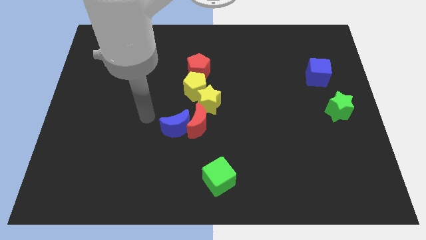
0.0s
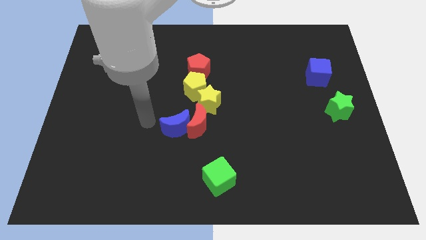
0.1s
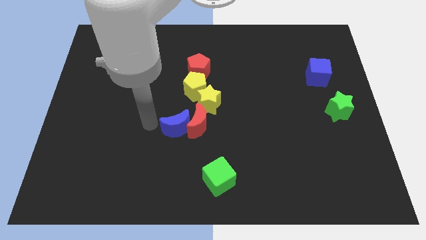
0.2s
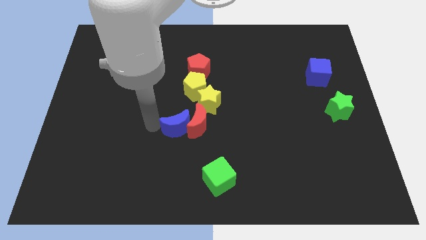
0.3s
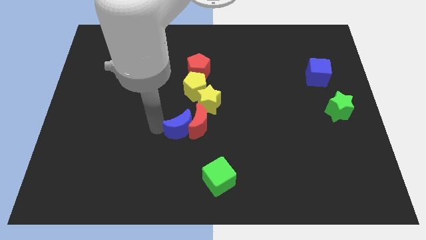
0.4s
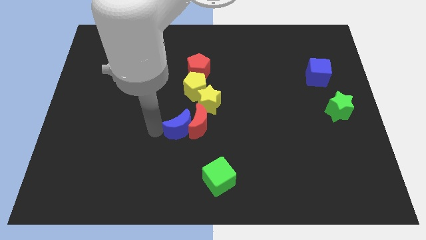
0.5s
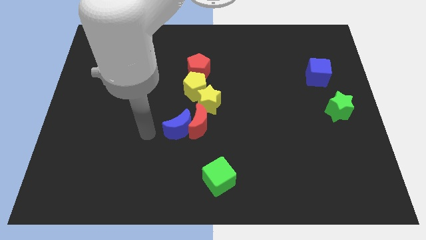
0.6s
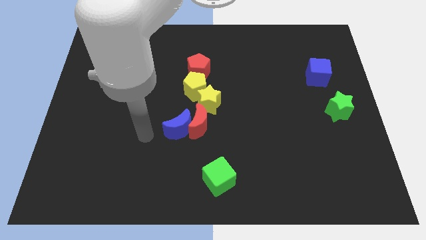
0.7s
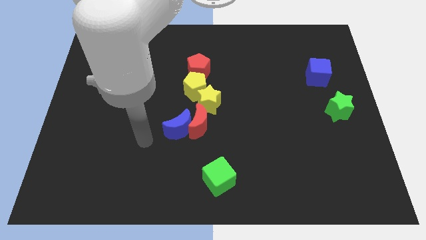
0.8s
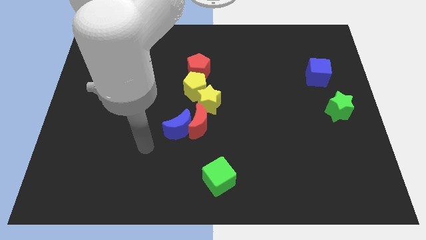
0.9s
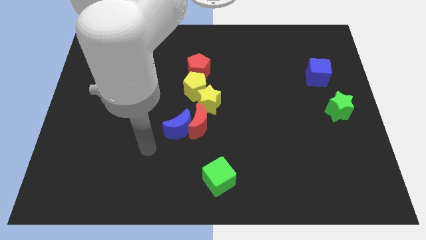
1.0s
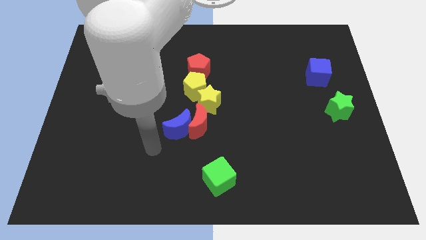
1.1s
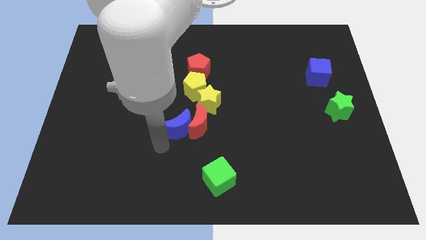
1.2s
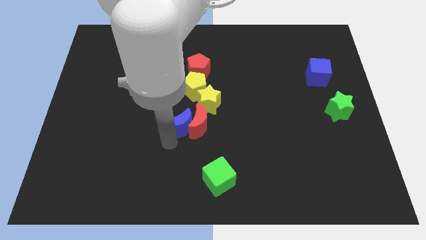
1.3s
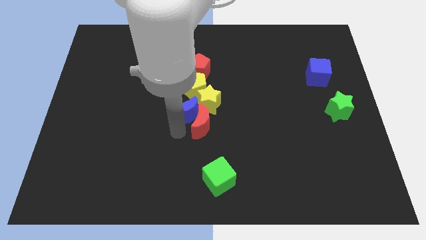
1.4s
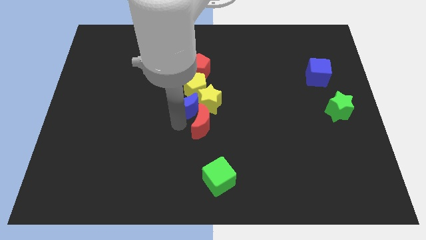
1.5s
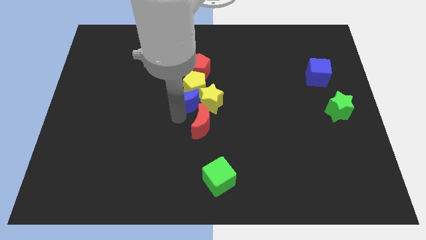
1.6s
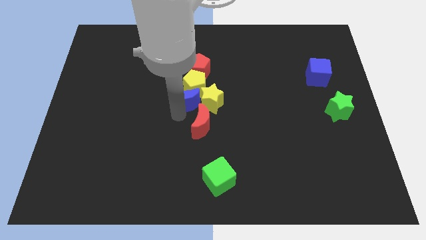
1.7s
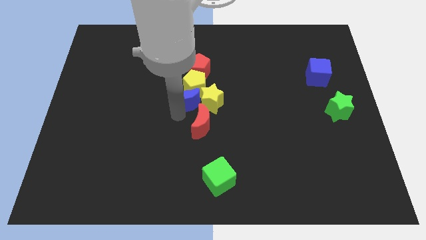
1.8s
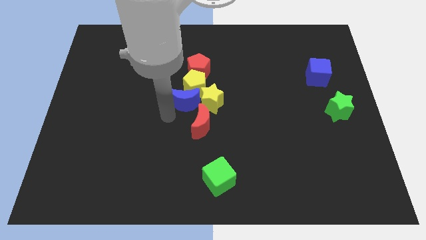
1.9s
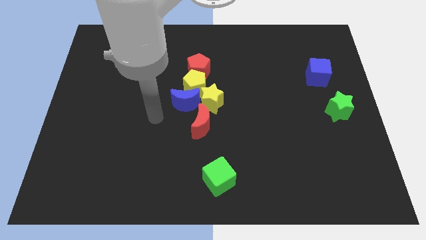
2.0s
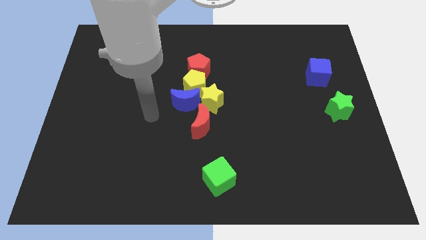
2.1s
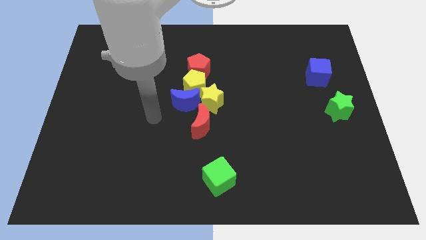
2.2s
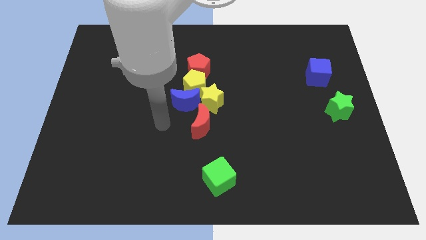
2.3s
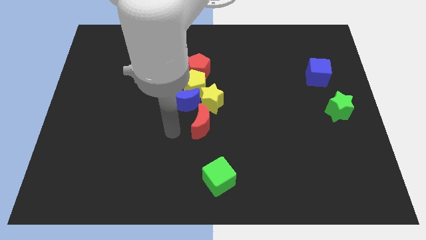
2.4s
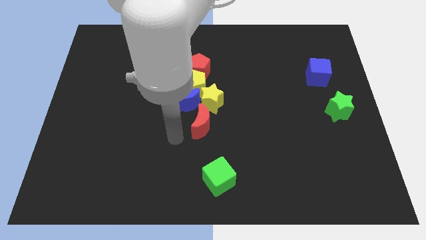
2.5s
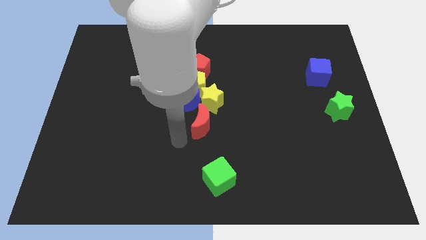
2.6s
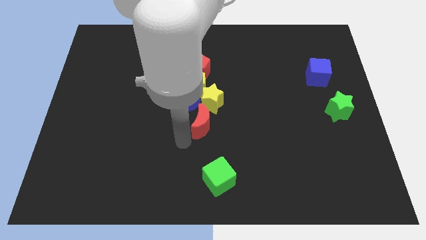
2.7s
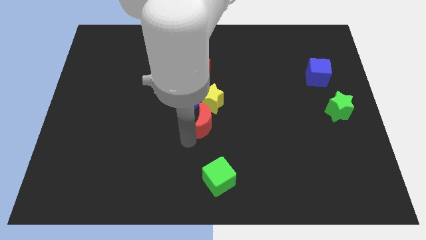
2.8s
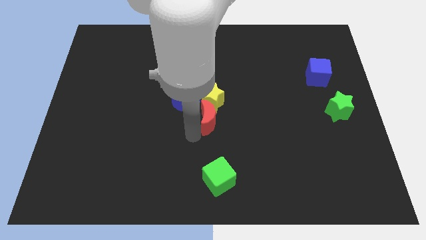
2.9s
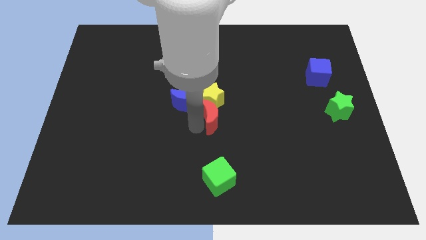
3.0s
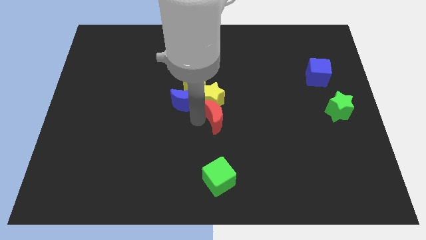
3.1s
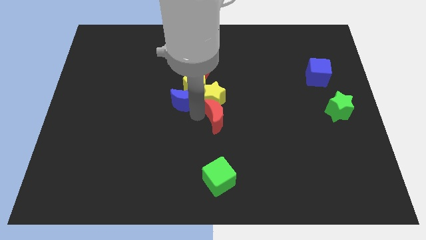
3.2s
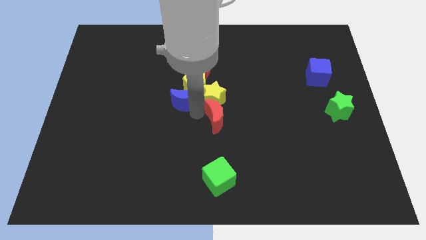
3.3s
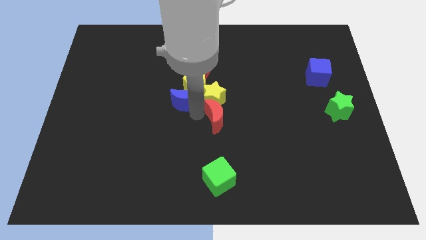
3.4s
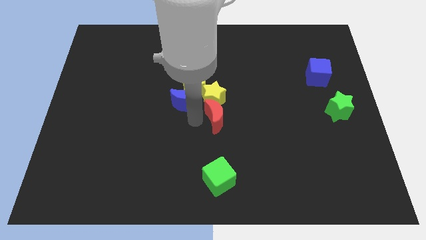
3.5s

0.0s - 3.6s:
push the blue crescent into the yellow pentagon towards top

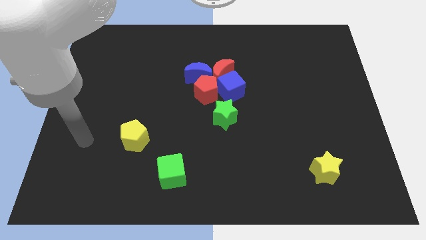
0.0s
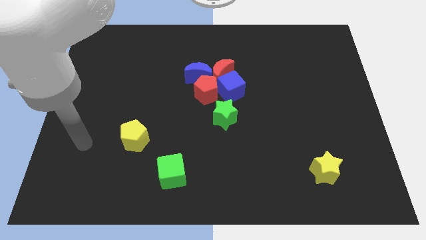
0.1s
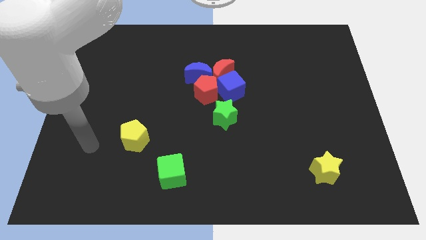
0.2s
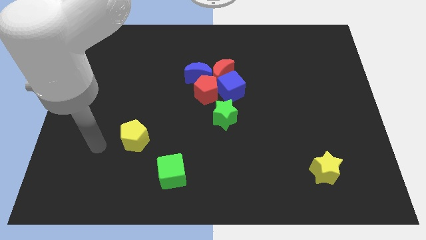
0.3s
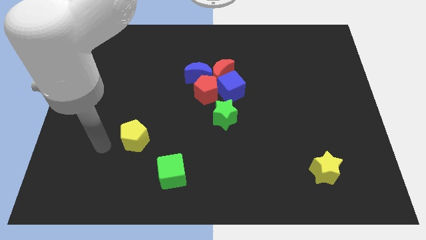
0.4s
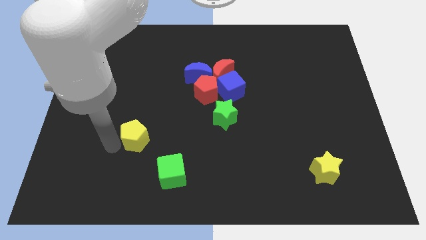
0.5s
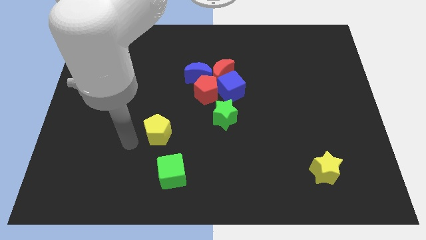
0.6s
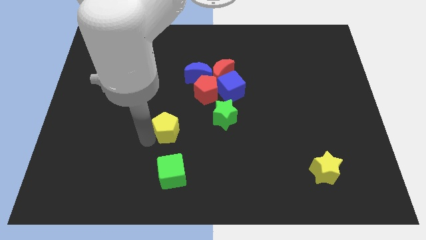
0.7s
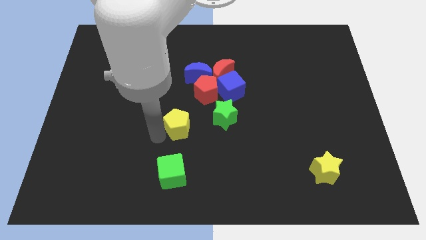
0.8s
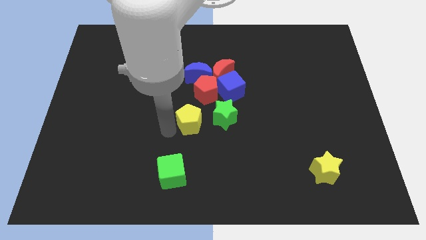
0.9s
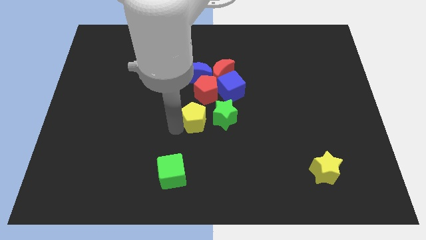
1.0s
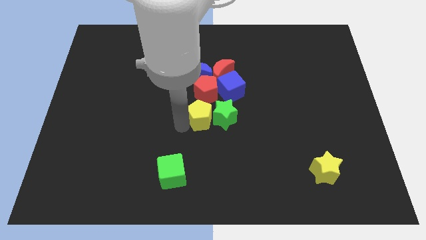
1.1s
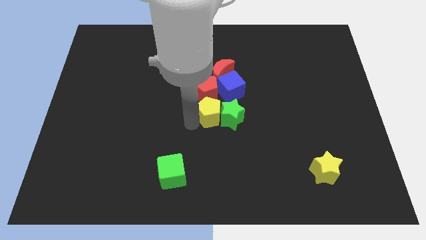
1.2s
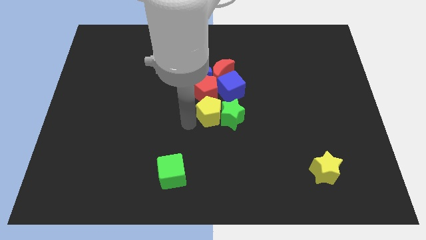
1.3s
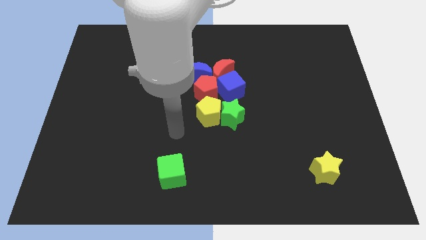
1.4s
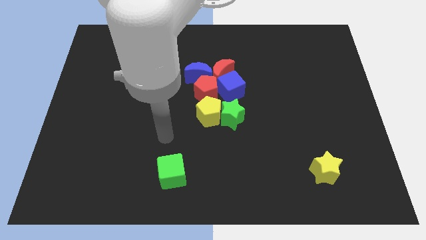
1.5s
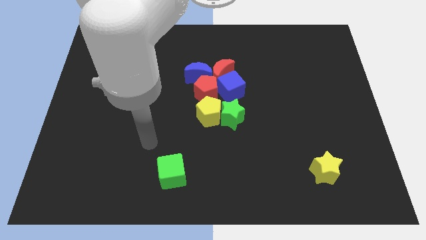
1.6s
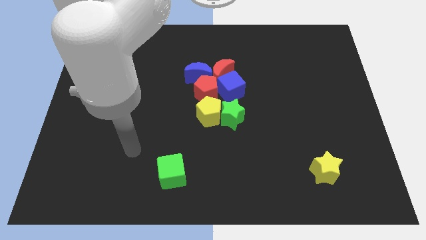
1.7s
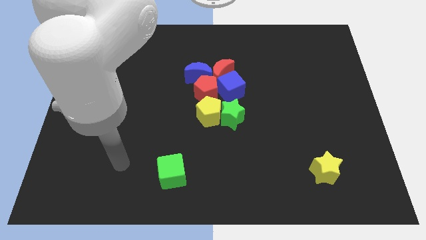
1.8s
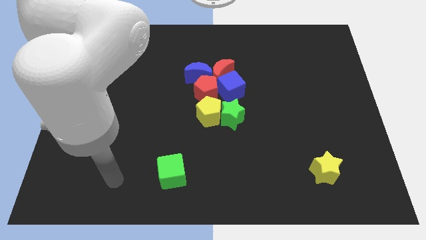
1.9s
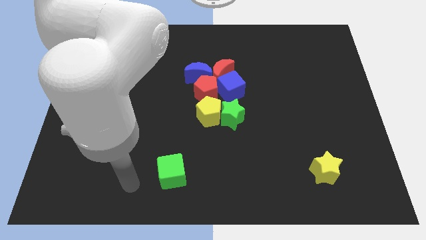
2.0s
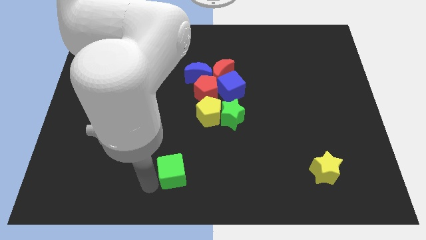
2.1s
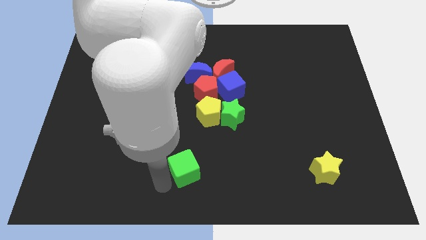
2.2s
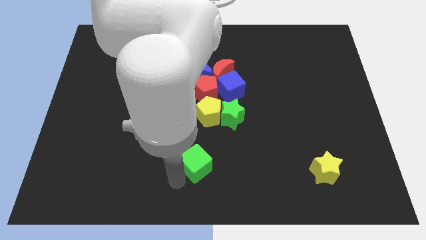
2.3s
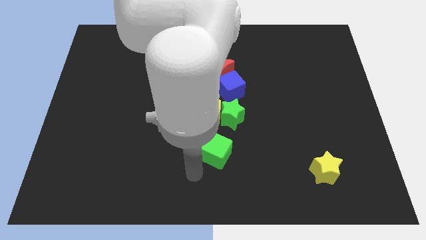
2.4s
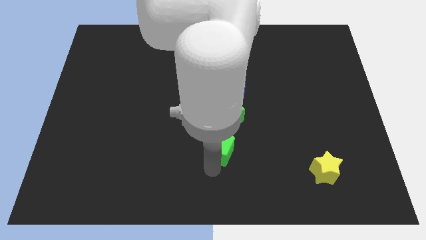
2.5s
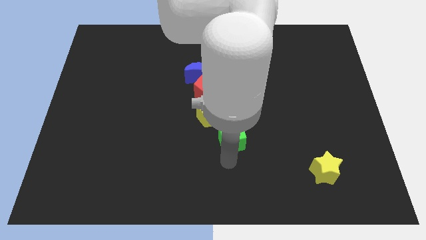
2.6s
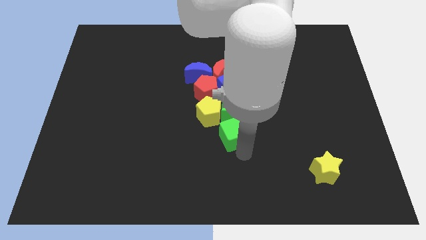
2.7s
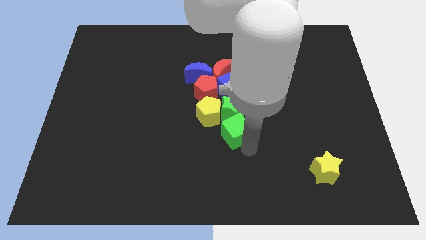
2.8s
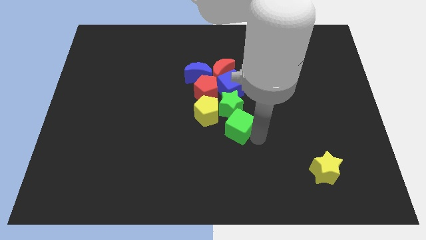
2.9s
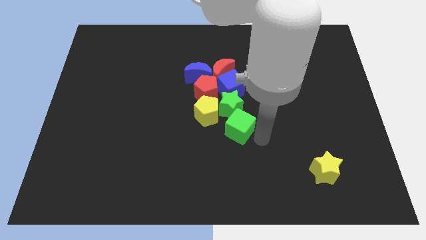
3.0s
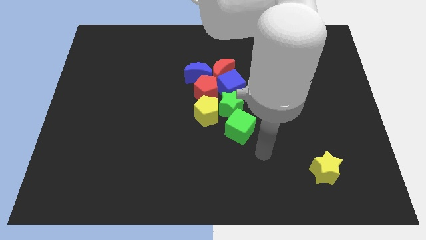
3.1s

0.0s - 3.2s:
place green block to the bottom the green star

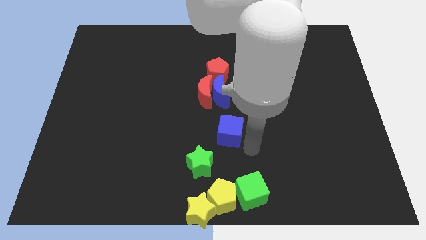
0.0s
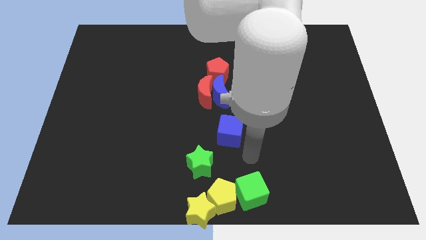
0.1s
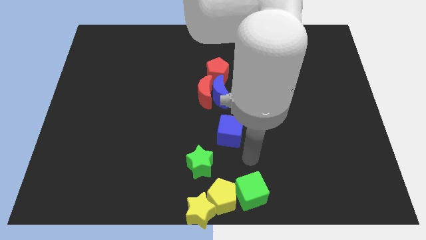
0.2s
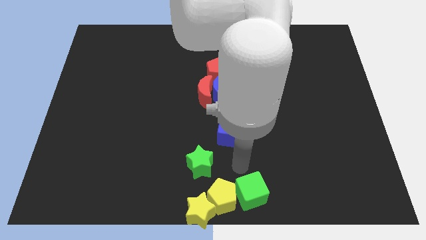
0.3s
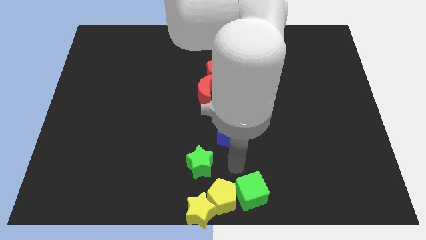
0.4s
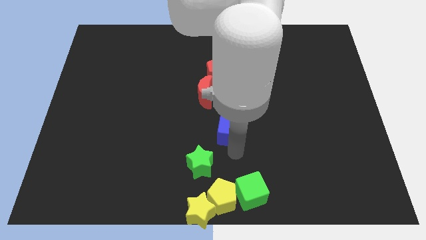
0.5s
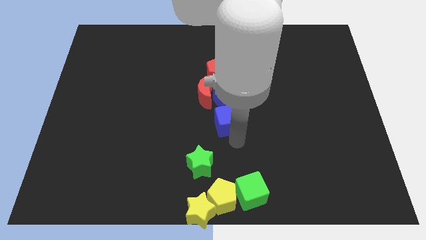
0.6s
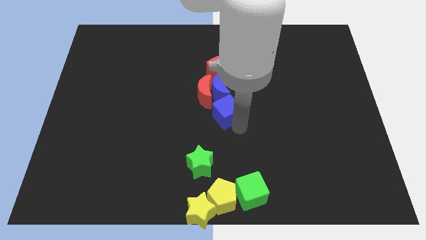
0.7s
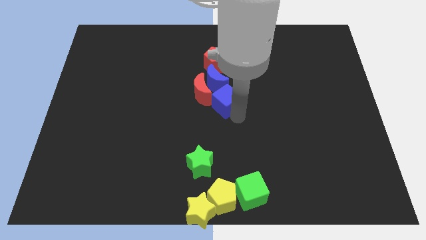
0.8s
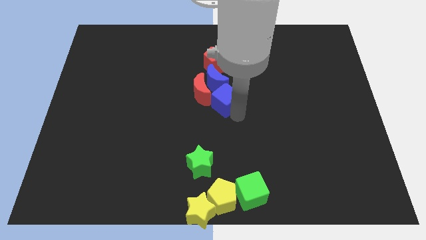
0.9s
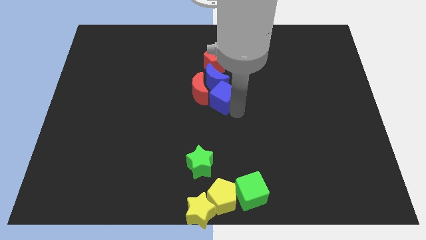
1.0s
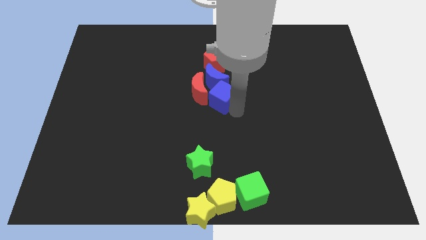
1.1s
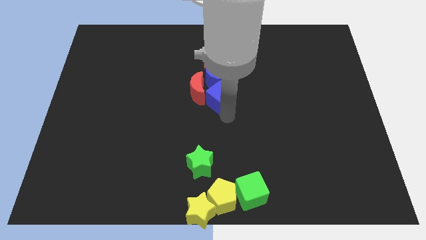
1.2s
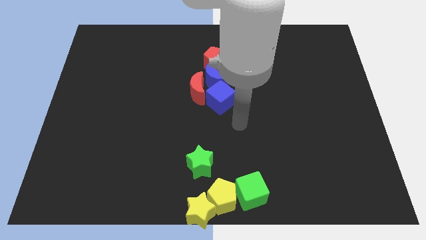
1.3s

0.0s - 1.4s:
move the blue cube into the blue crescent

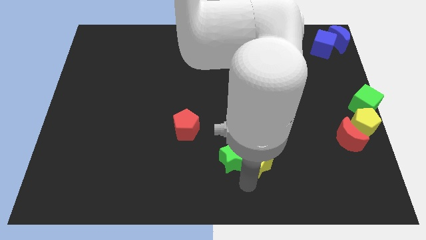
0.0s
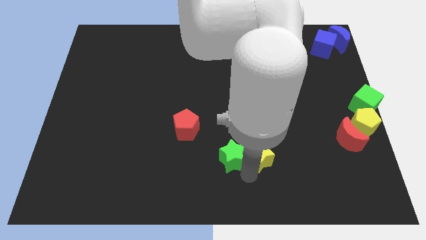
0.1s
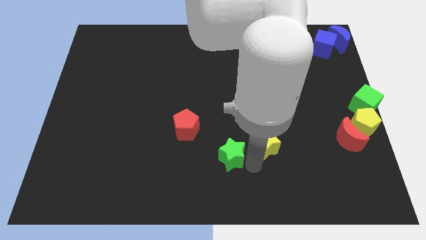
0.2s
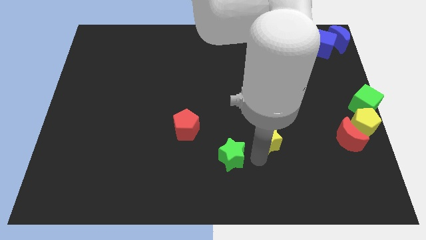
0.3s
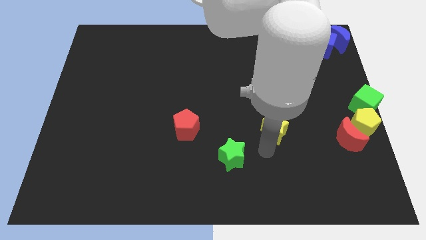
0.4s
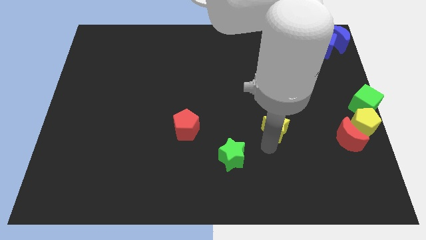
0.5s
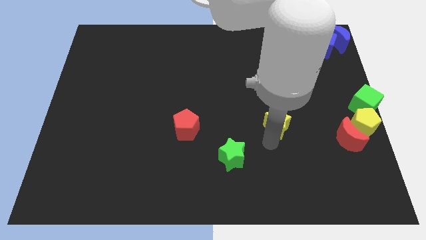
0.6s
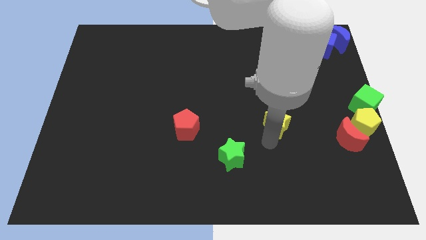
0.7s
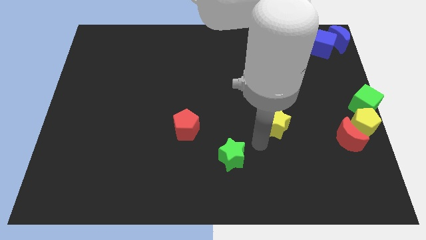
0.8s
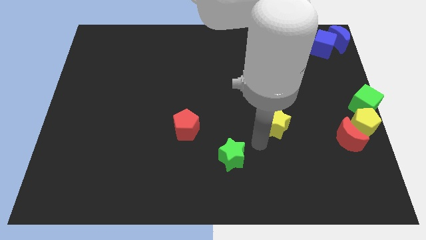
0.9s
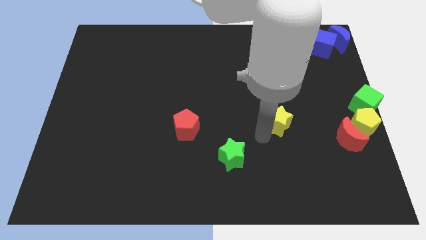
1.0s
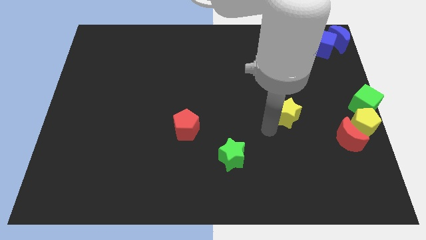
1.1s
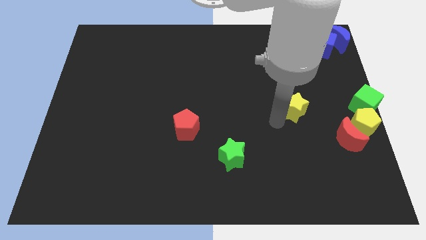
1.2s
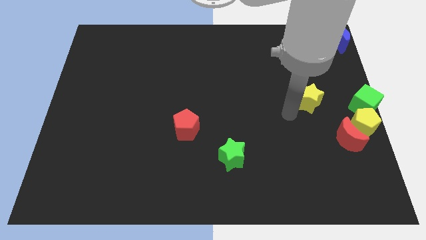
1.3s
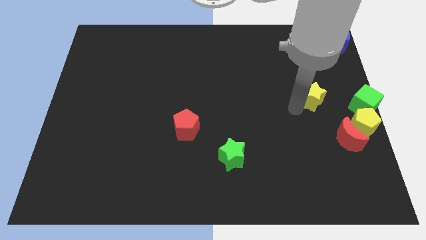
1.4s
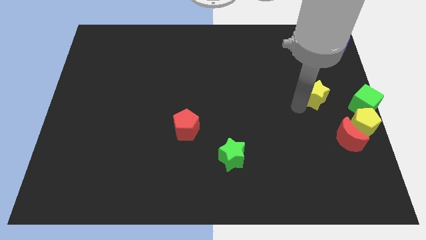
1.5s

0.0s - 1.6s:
separate the yellow star from the green star
